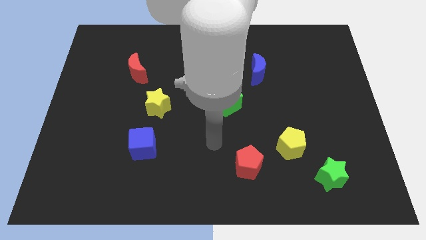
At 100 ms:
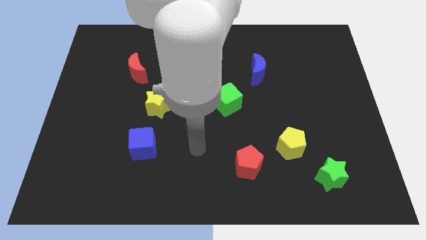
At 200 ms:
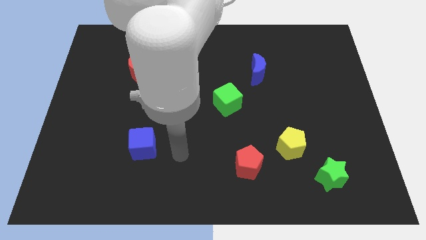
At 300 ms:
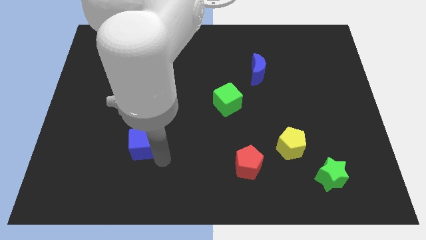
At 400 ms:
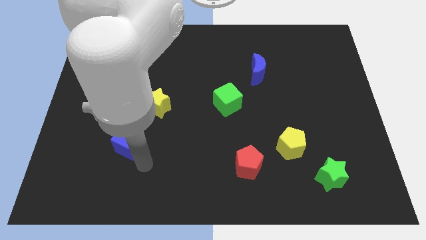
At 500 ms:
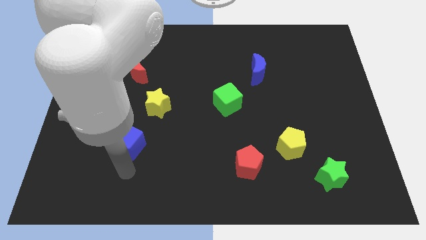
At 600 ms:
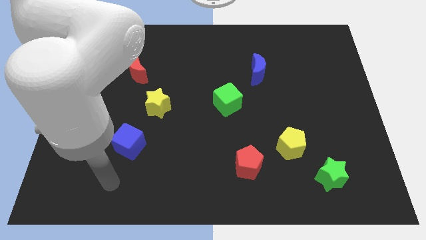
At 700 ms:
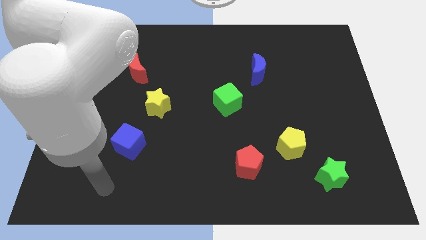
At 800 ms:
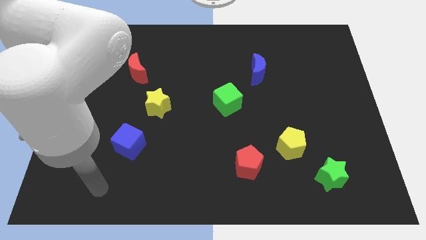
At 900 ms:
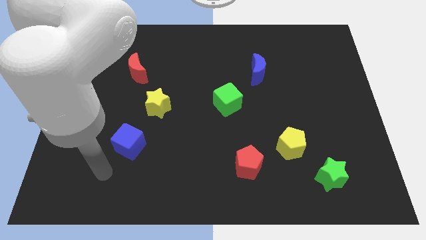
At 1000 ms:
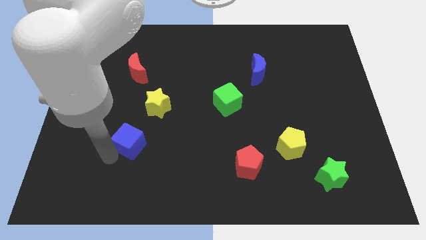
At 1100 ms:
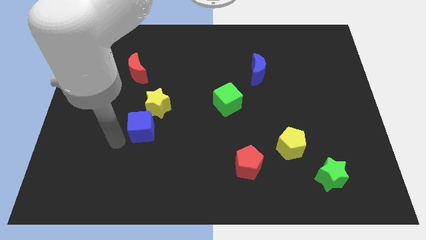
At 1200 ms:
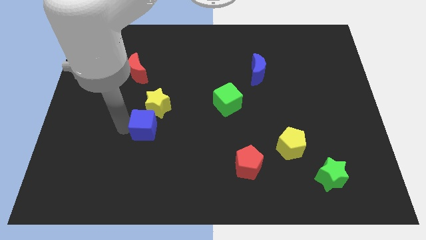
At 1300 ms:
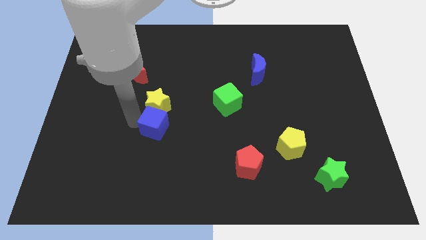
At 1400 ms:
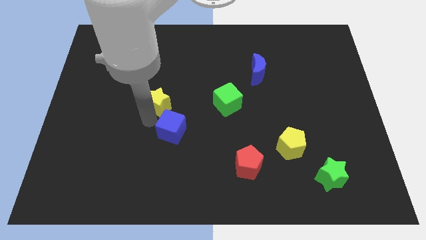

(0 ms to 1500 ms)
push the blue cube below the yellow star

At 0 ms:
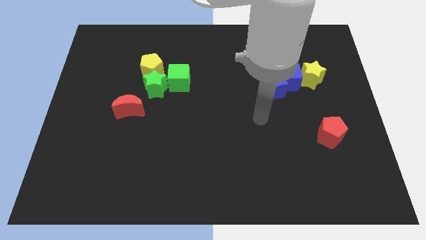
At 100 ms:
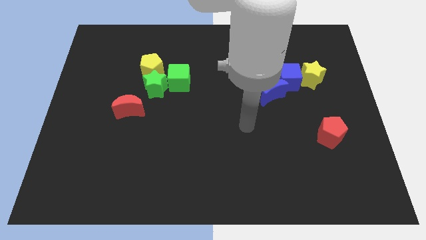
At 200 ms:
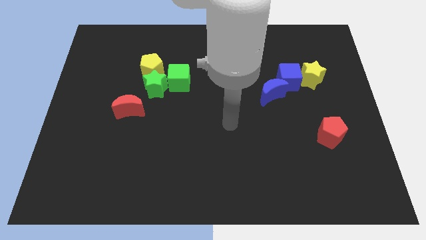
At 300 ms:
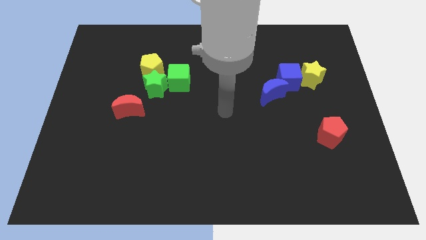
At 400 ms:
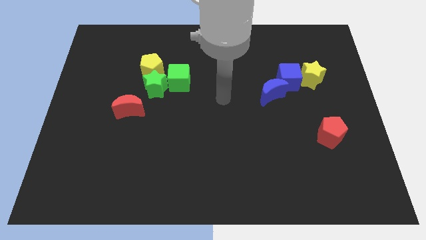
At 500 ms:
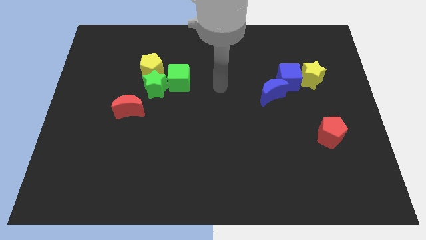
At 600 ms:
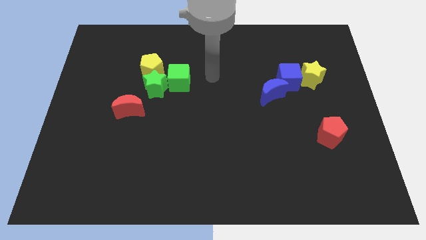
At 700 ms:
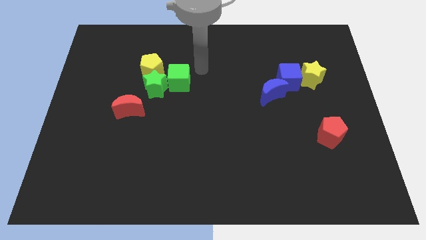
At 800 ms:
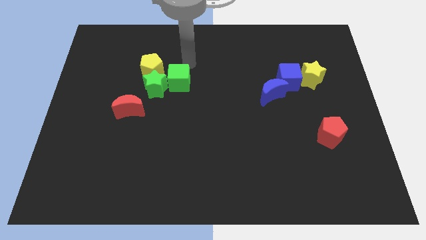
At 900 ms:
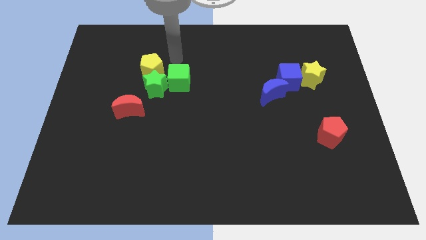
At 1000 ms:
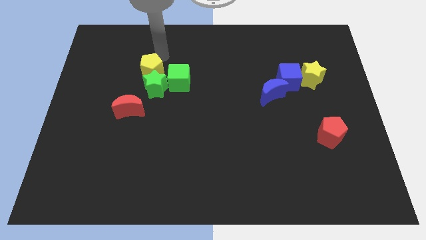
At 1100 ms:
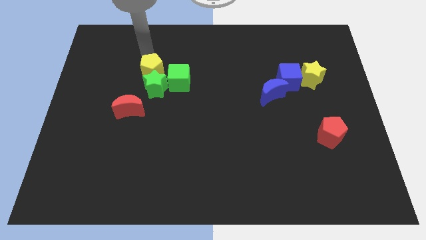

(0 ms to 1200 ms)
move the arm towards the yellow pentagon

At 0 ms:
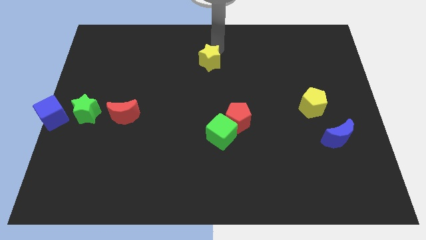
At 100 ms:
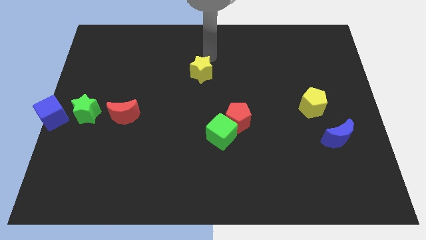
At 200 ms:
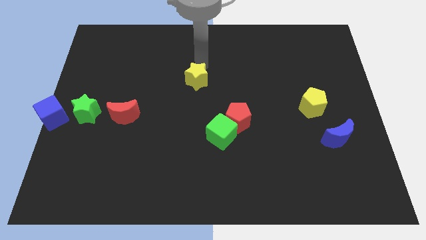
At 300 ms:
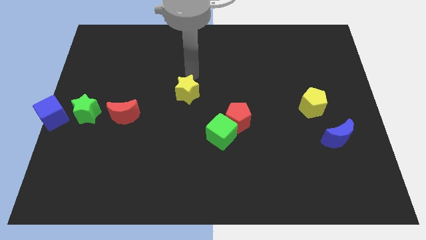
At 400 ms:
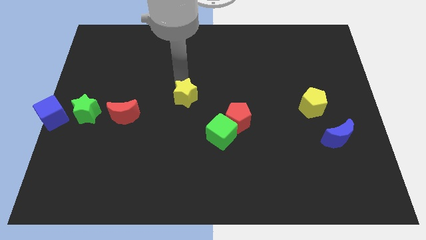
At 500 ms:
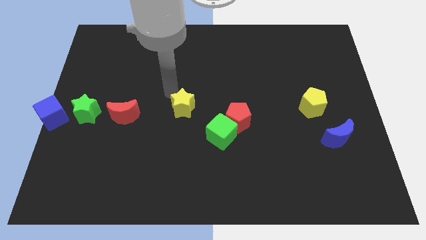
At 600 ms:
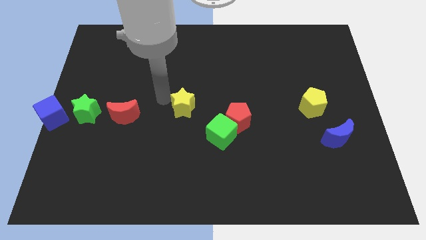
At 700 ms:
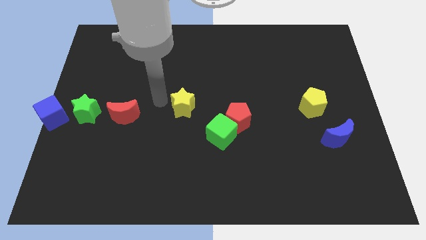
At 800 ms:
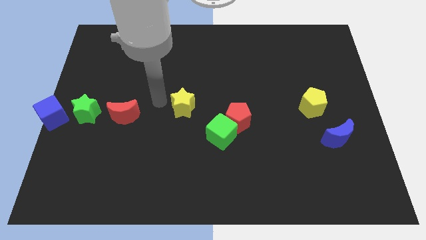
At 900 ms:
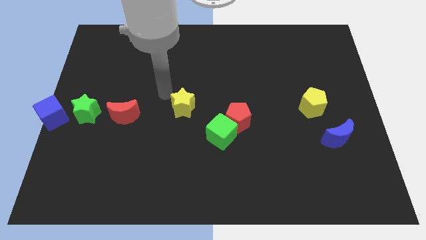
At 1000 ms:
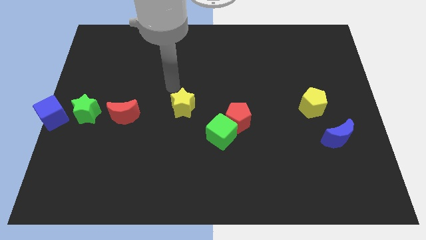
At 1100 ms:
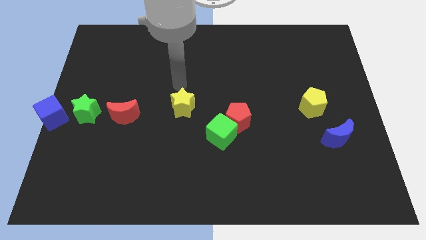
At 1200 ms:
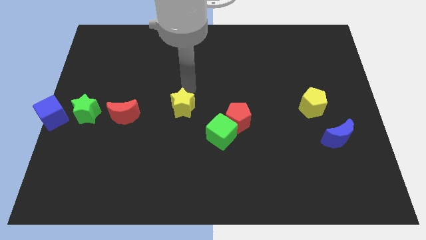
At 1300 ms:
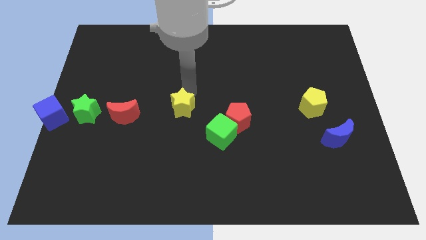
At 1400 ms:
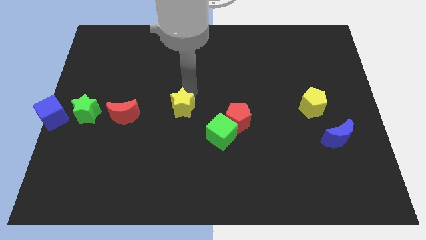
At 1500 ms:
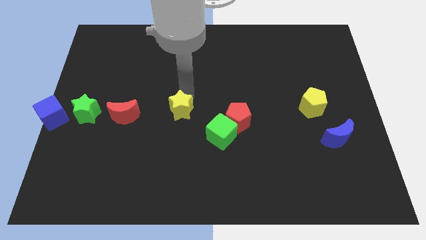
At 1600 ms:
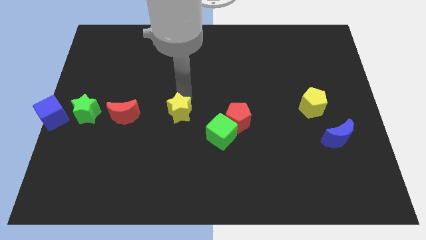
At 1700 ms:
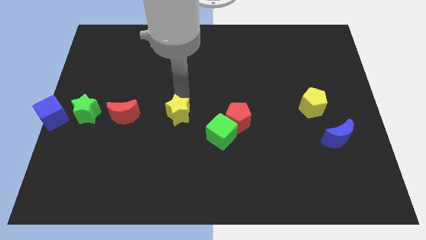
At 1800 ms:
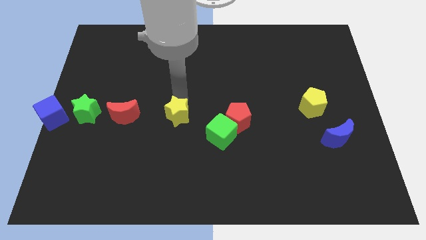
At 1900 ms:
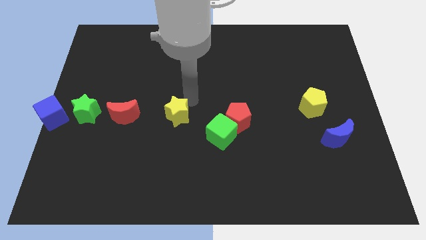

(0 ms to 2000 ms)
push the yellow star diagonally top left to the green cube

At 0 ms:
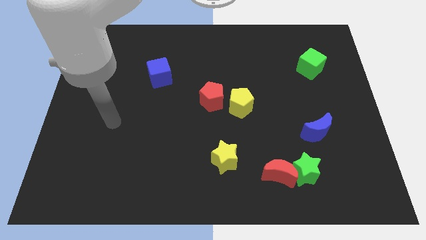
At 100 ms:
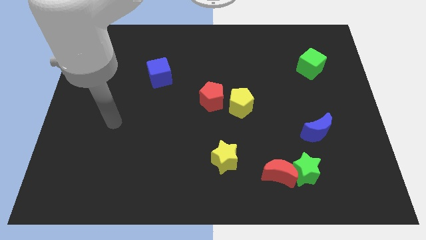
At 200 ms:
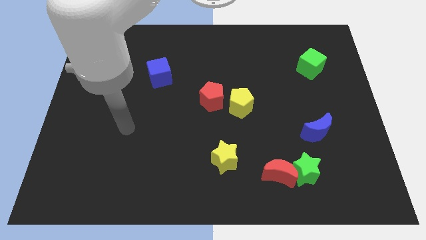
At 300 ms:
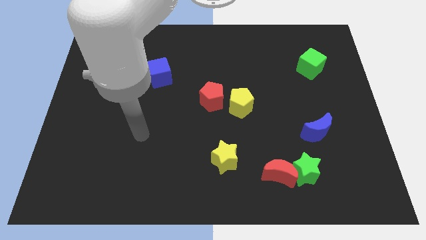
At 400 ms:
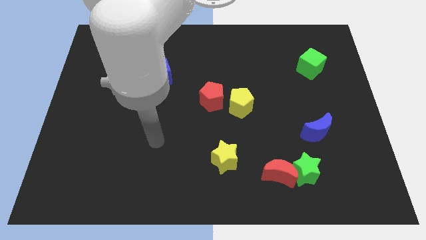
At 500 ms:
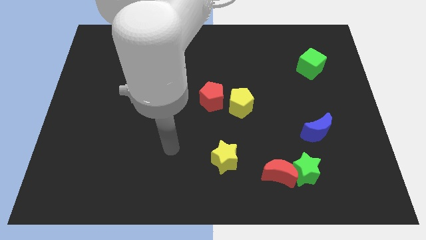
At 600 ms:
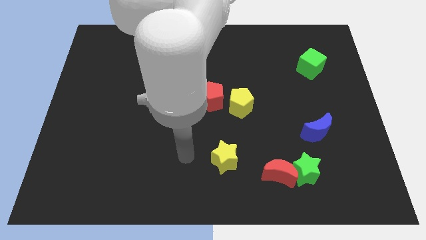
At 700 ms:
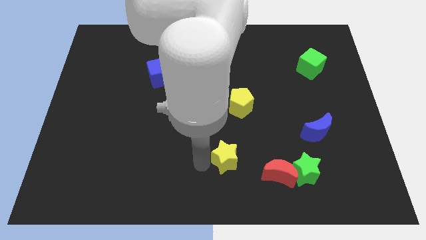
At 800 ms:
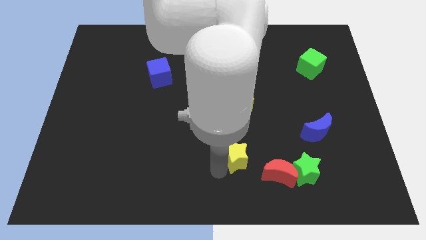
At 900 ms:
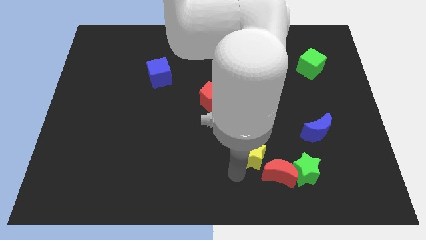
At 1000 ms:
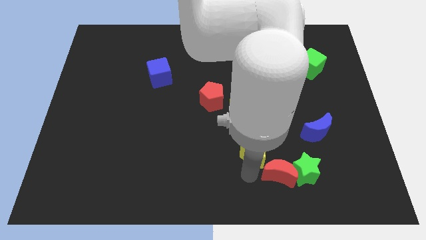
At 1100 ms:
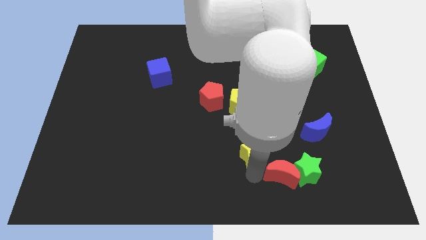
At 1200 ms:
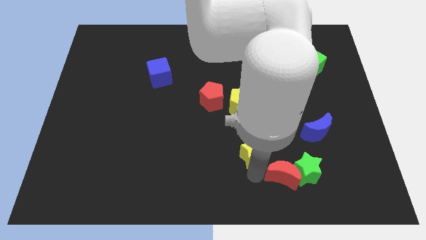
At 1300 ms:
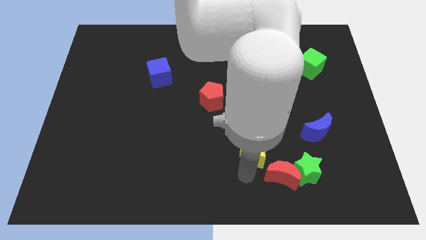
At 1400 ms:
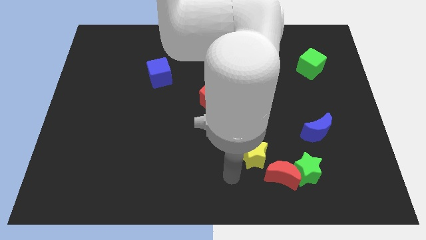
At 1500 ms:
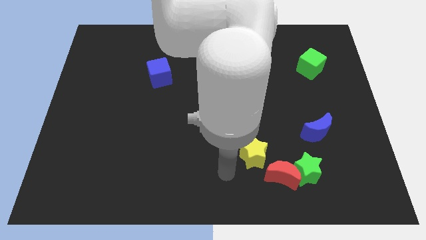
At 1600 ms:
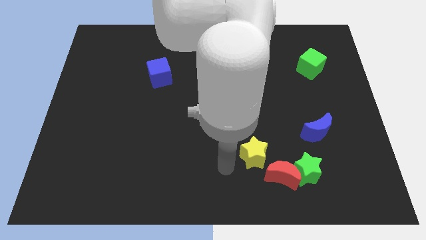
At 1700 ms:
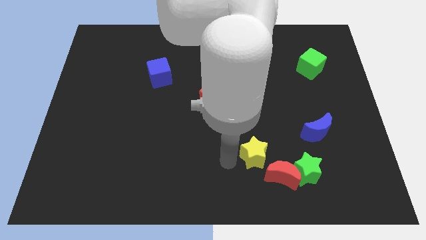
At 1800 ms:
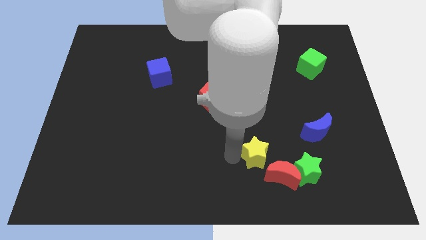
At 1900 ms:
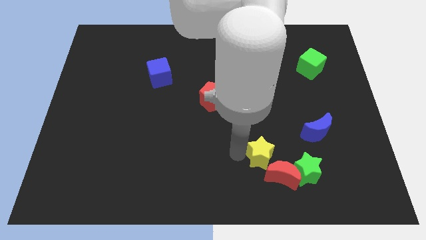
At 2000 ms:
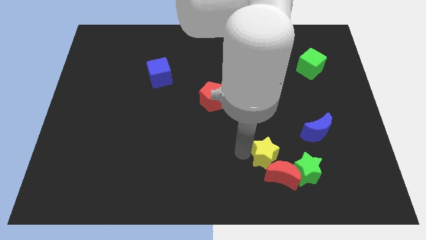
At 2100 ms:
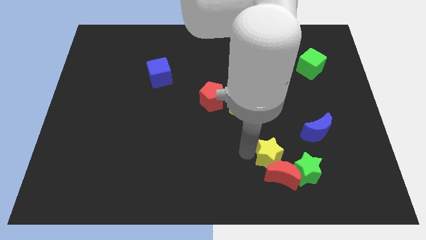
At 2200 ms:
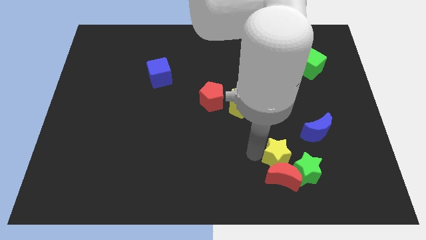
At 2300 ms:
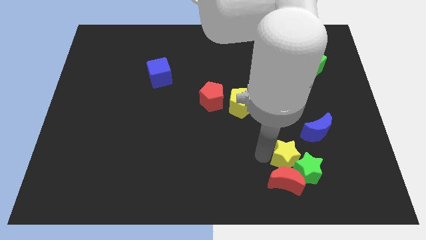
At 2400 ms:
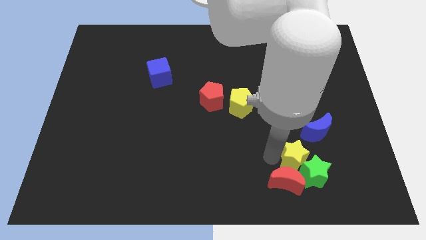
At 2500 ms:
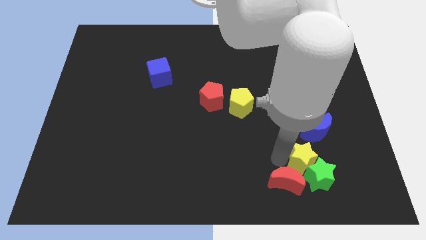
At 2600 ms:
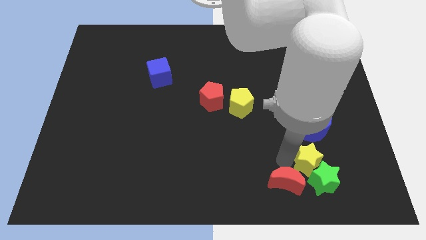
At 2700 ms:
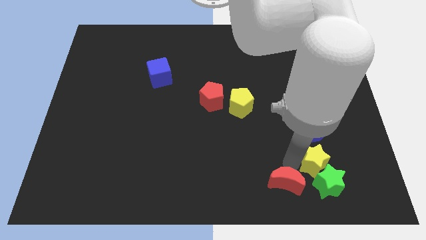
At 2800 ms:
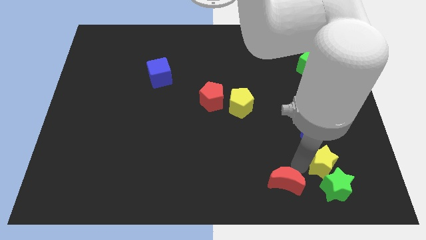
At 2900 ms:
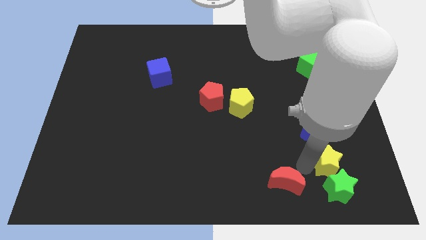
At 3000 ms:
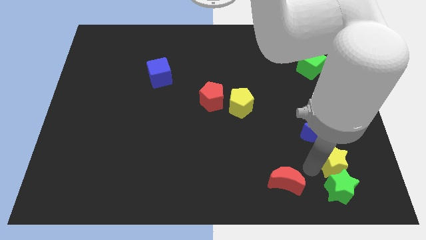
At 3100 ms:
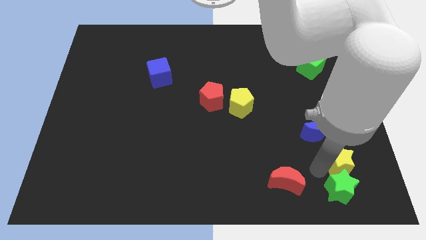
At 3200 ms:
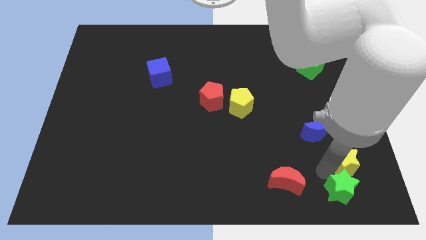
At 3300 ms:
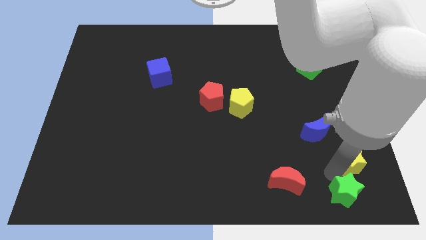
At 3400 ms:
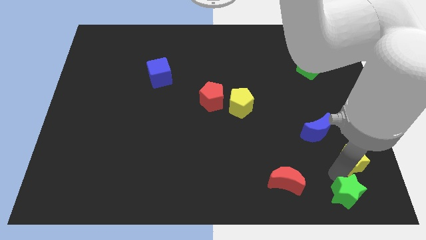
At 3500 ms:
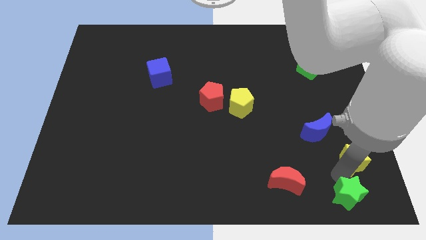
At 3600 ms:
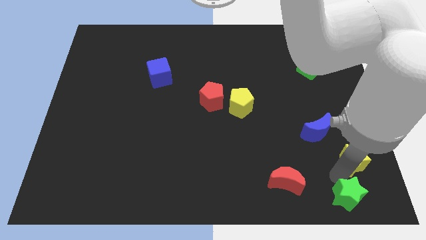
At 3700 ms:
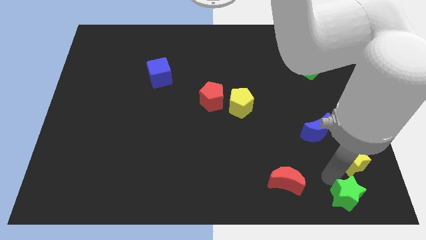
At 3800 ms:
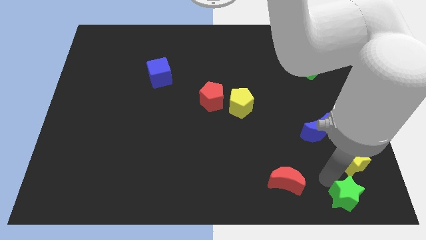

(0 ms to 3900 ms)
push the yellow star into green star

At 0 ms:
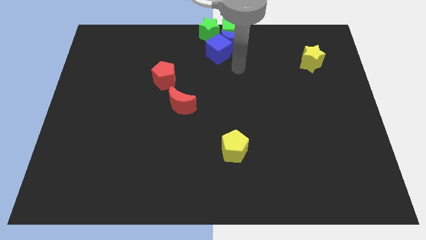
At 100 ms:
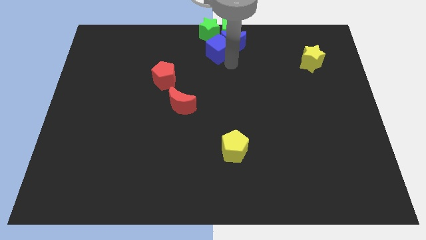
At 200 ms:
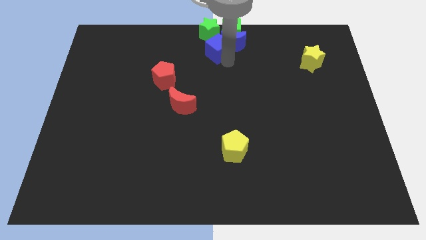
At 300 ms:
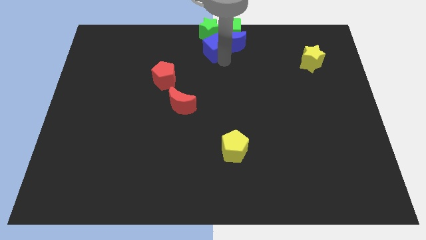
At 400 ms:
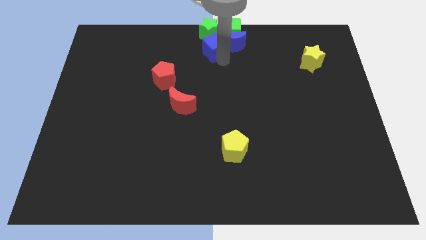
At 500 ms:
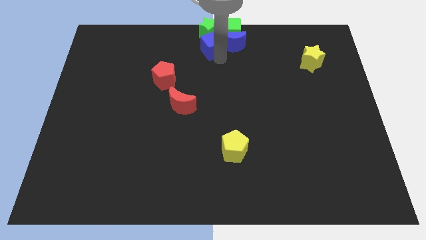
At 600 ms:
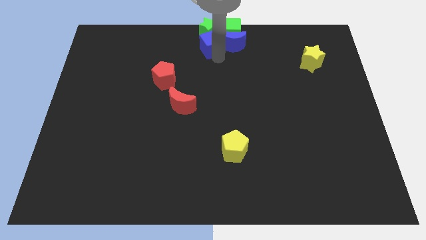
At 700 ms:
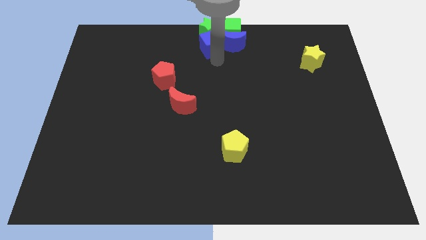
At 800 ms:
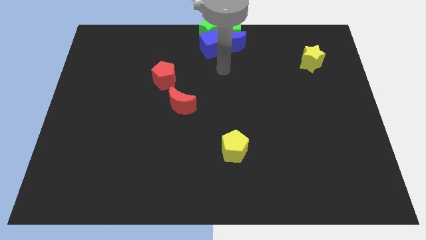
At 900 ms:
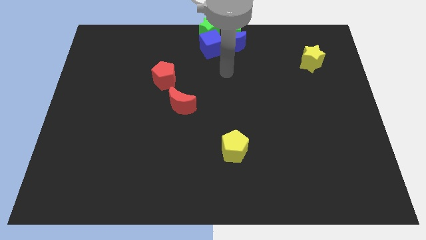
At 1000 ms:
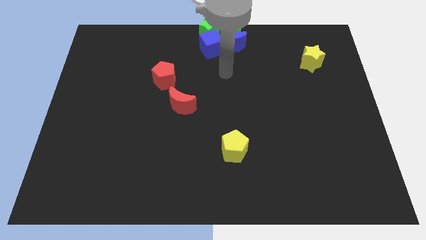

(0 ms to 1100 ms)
move the yellow pentagon to the bottom center of the board
